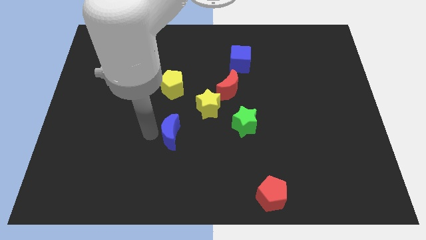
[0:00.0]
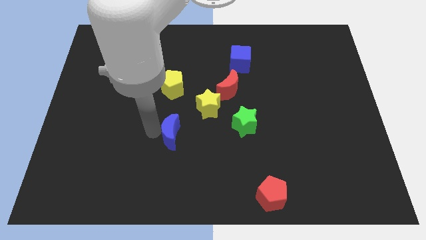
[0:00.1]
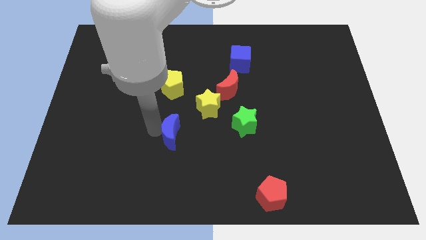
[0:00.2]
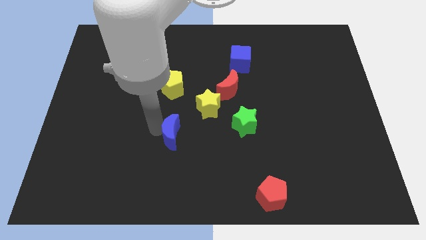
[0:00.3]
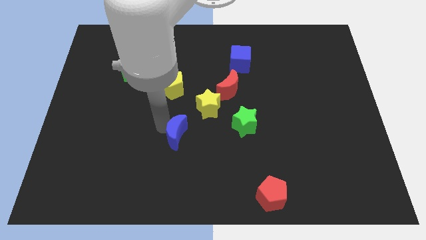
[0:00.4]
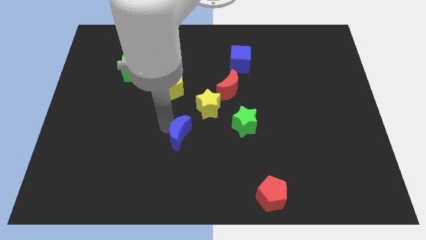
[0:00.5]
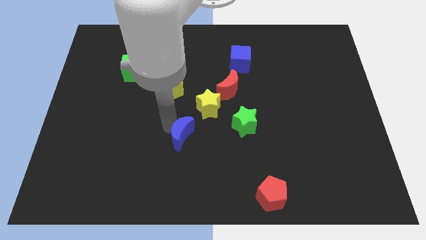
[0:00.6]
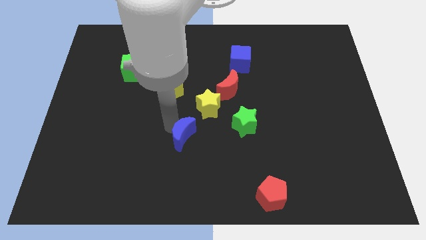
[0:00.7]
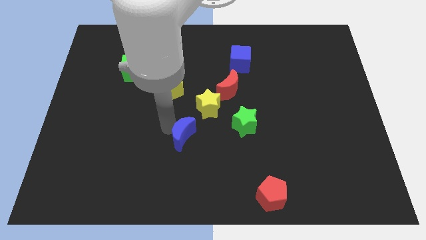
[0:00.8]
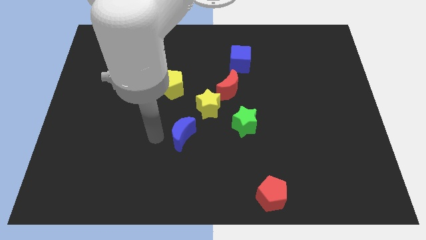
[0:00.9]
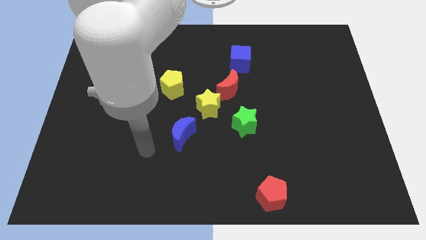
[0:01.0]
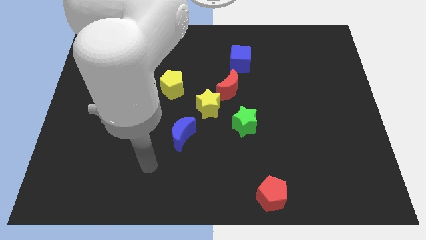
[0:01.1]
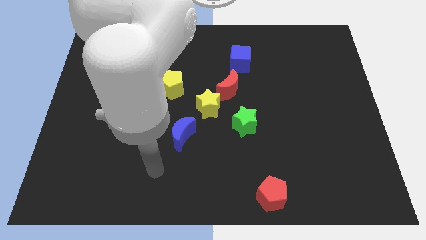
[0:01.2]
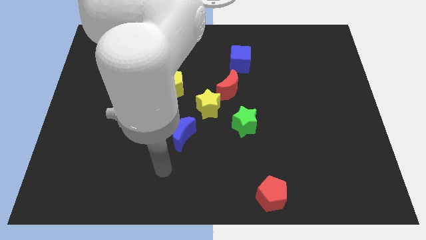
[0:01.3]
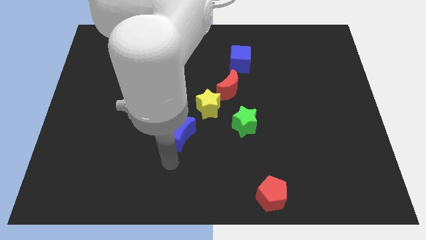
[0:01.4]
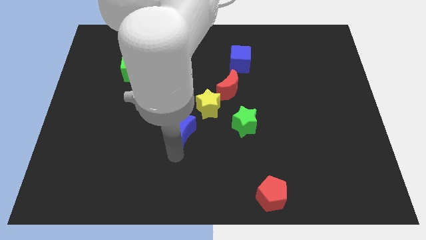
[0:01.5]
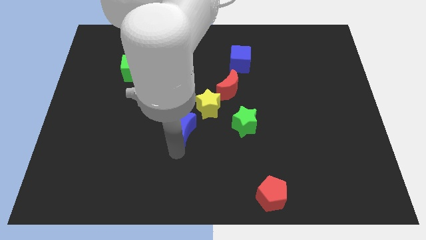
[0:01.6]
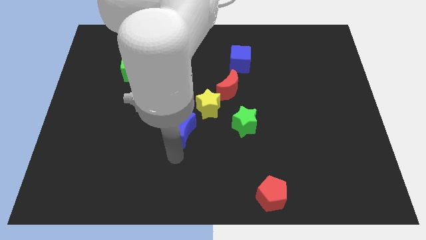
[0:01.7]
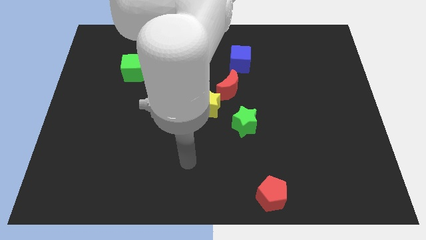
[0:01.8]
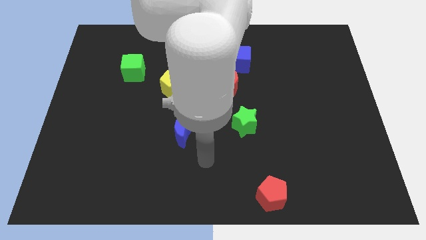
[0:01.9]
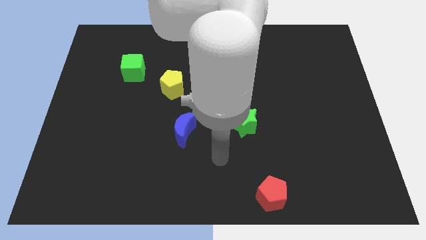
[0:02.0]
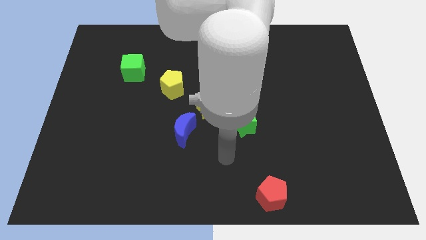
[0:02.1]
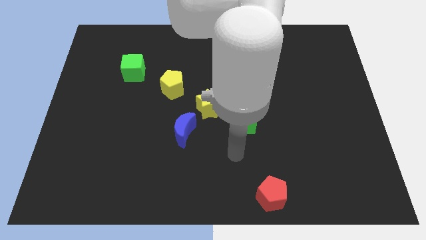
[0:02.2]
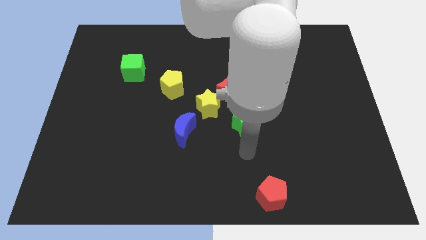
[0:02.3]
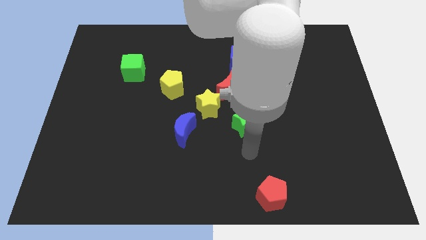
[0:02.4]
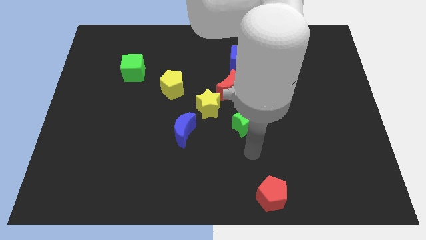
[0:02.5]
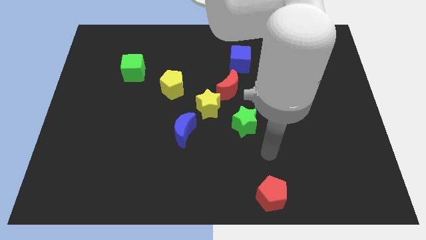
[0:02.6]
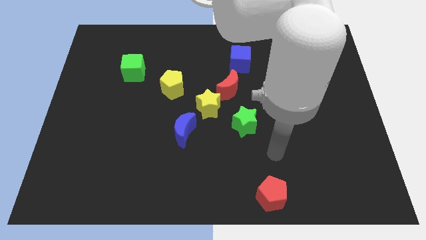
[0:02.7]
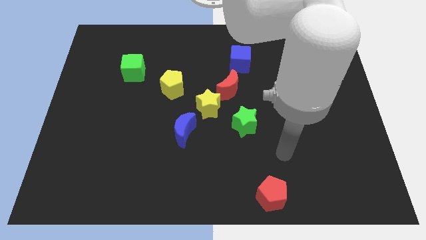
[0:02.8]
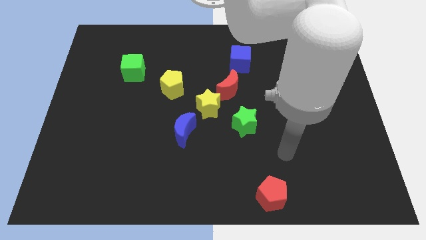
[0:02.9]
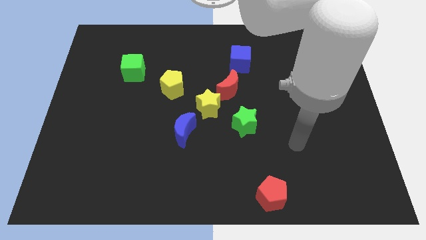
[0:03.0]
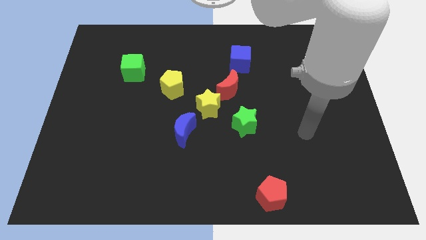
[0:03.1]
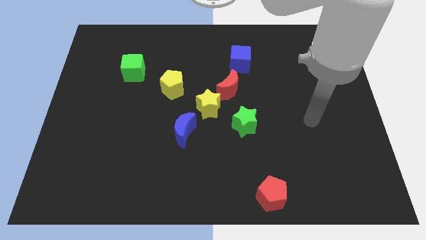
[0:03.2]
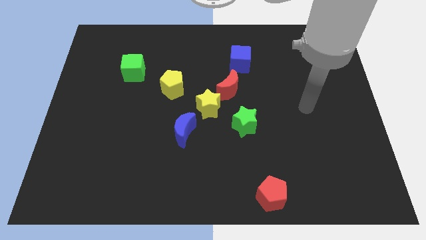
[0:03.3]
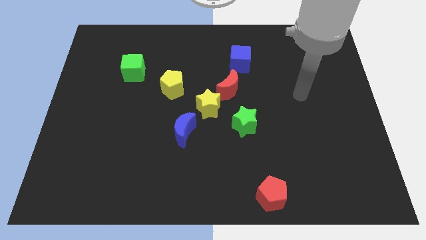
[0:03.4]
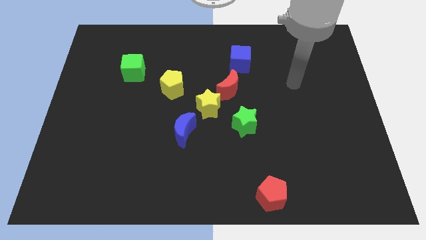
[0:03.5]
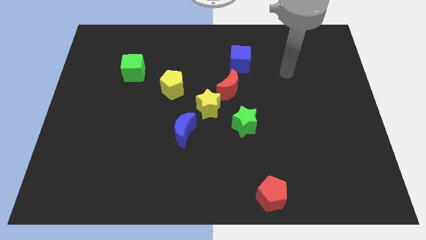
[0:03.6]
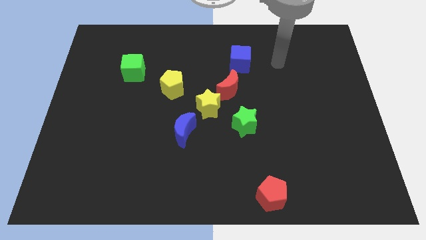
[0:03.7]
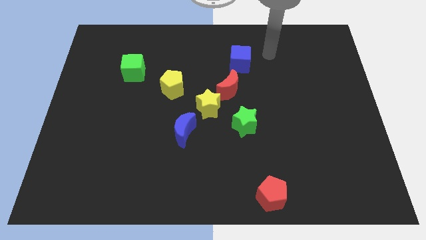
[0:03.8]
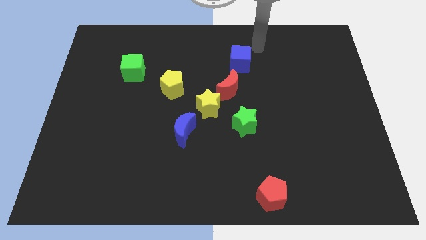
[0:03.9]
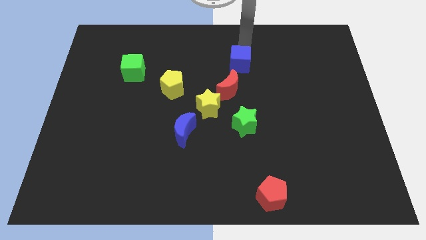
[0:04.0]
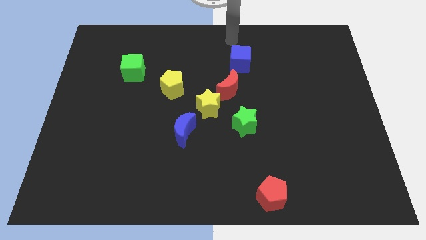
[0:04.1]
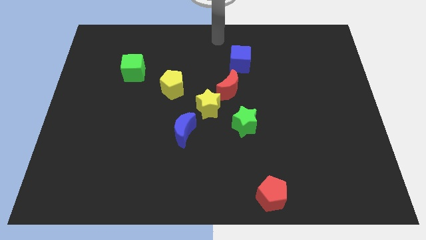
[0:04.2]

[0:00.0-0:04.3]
point your arm at the top center of the board

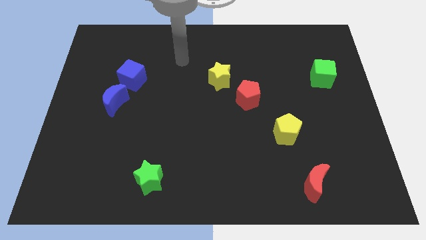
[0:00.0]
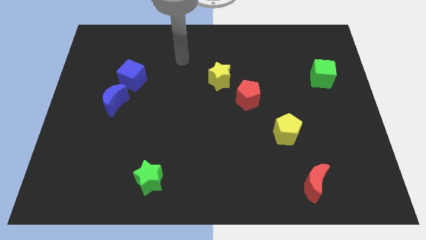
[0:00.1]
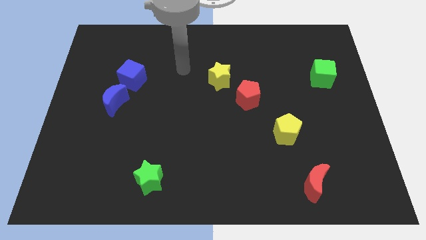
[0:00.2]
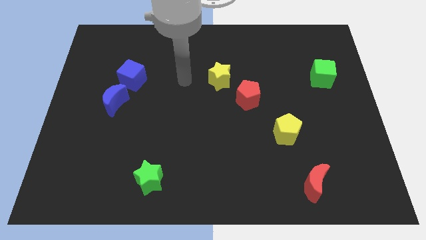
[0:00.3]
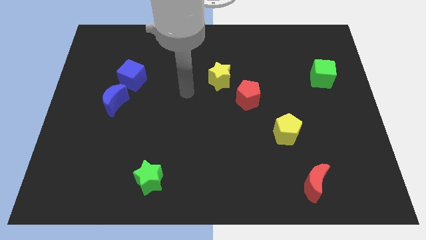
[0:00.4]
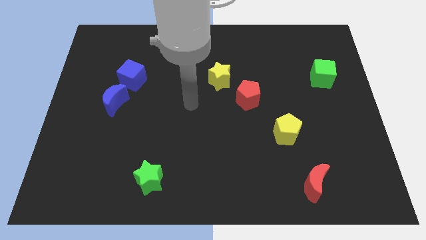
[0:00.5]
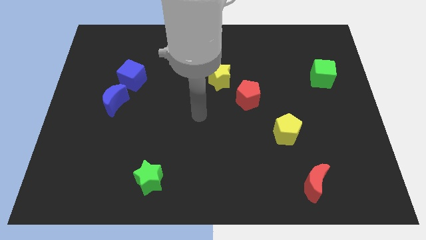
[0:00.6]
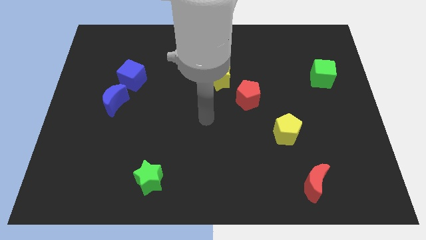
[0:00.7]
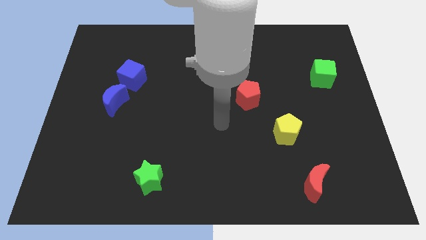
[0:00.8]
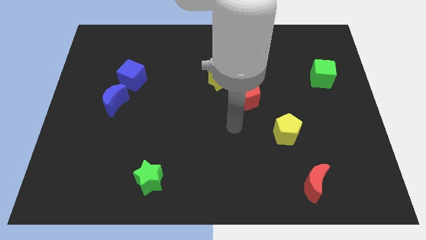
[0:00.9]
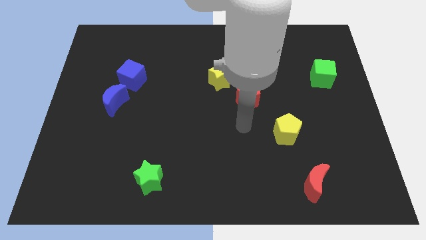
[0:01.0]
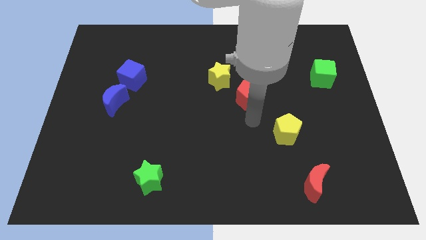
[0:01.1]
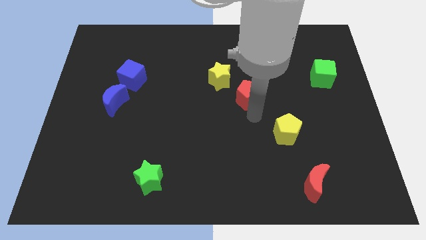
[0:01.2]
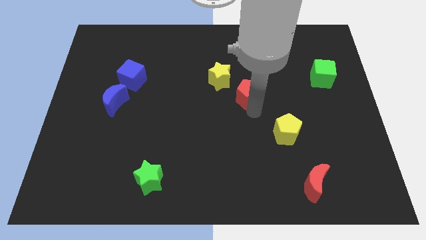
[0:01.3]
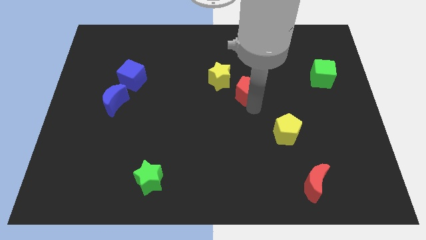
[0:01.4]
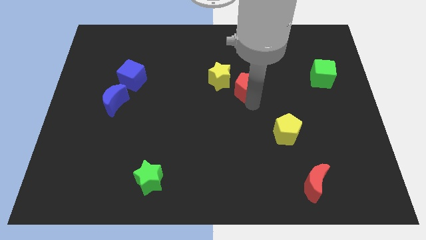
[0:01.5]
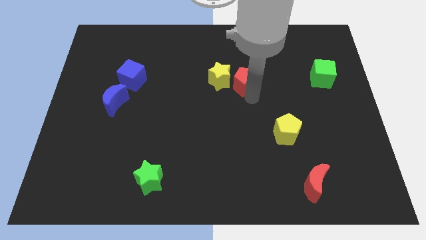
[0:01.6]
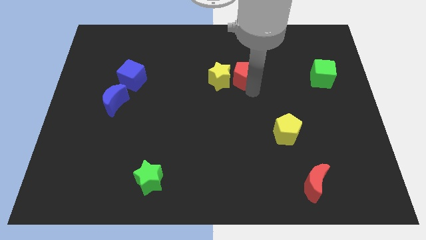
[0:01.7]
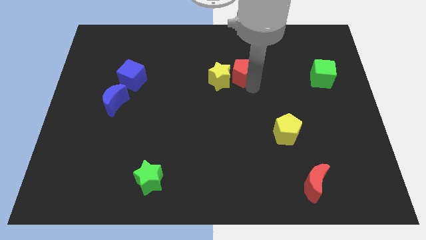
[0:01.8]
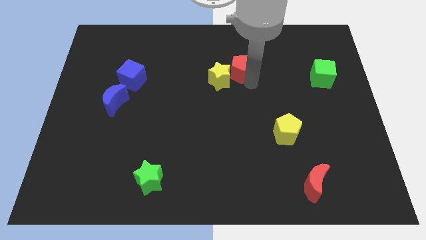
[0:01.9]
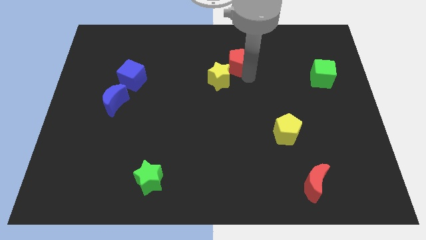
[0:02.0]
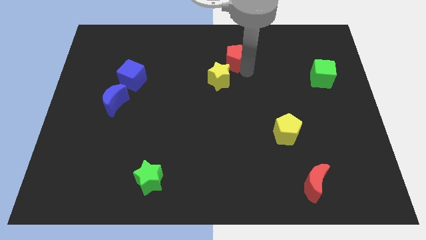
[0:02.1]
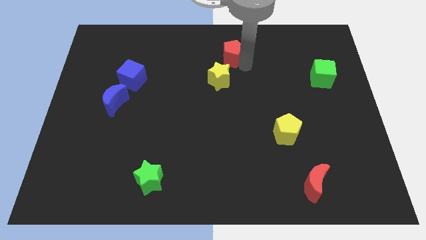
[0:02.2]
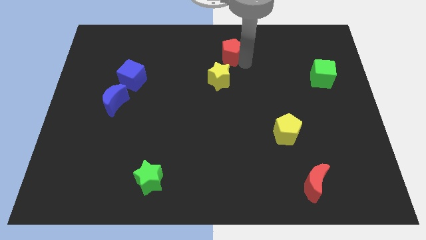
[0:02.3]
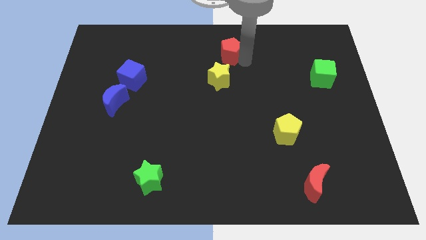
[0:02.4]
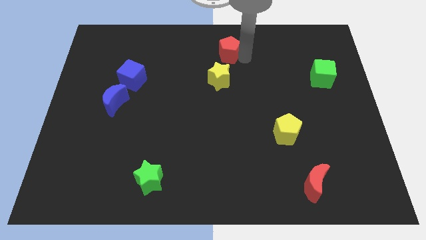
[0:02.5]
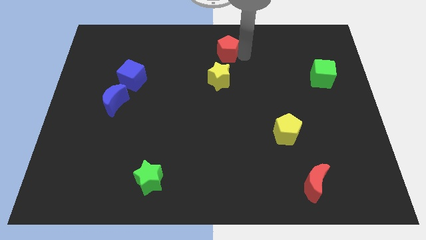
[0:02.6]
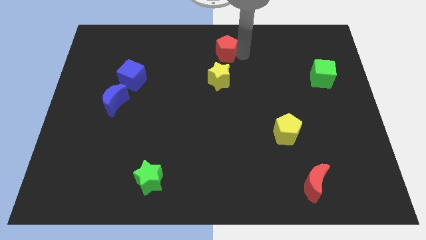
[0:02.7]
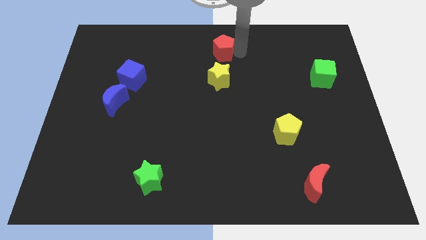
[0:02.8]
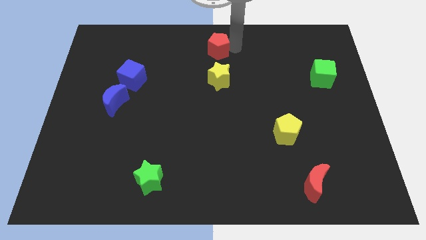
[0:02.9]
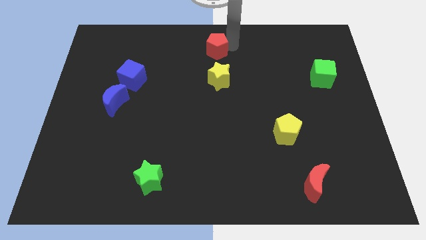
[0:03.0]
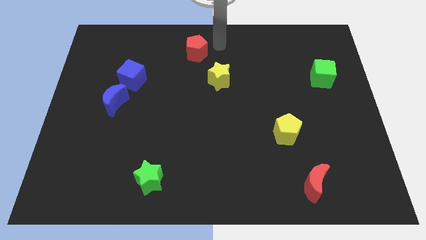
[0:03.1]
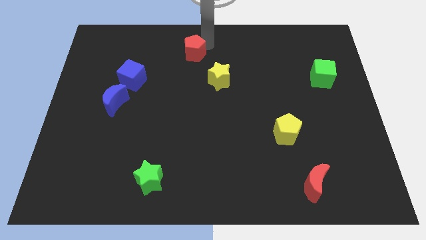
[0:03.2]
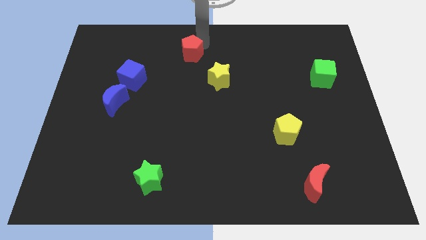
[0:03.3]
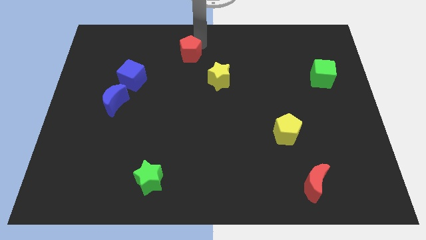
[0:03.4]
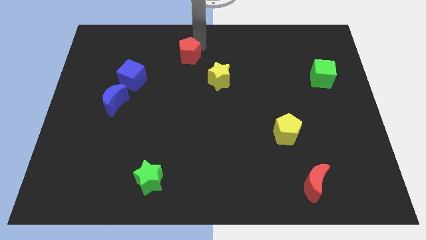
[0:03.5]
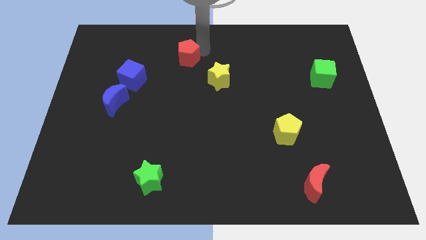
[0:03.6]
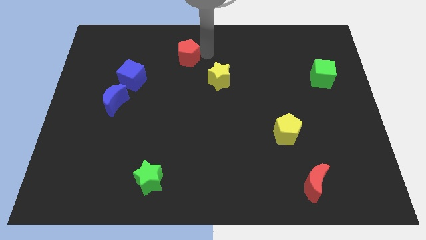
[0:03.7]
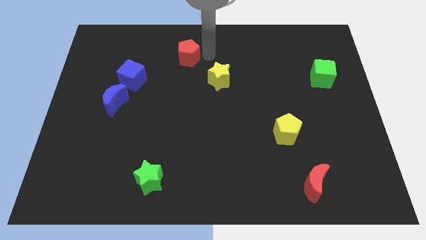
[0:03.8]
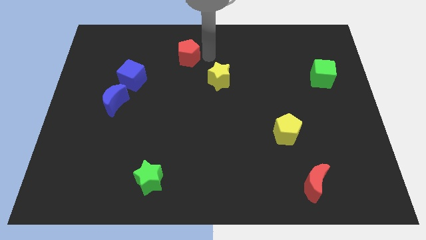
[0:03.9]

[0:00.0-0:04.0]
place the red pentagon to the top left side of the yellow star

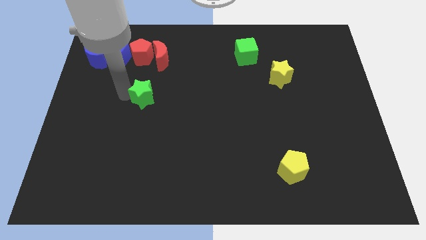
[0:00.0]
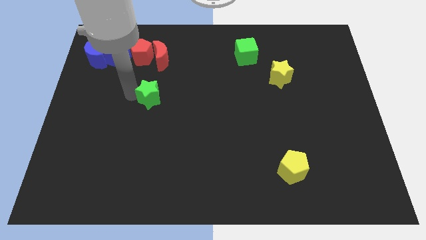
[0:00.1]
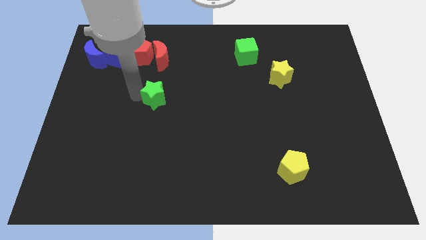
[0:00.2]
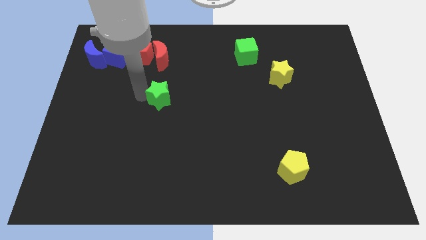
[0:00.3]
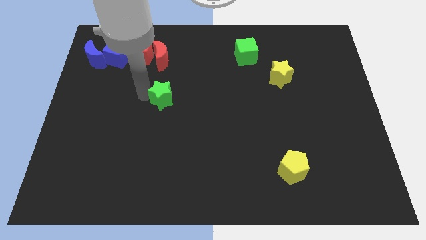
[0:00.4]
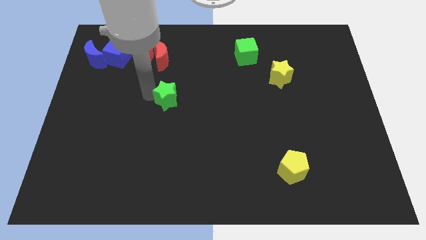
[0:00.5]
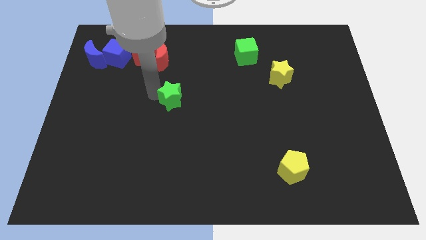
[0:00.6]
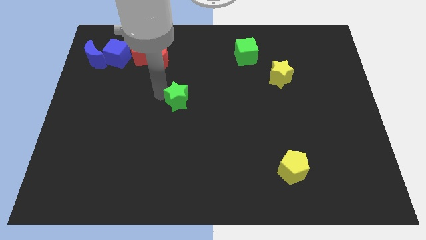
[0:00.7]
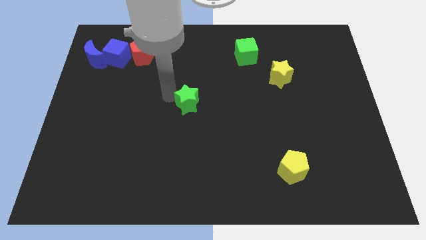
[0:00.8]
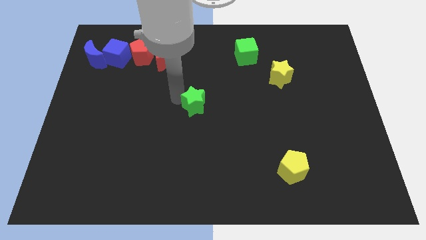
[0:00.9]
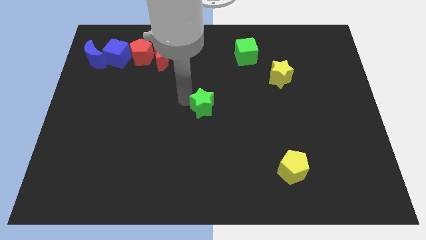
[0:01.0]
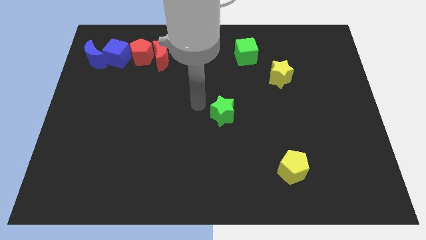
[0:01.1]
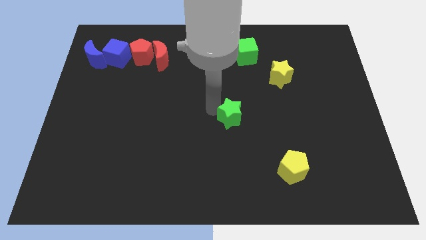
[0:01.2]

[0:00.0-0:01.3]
place the green star at the center of the board
